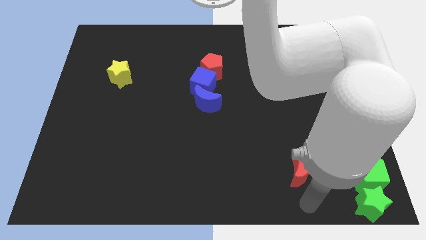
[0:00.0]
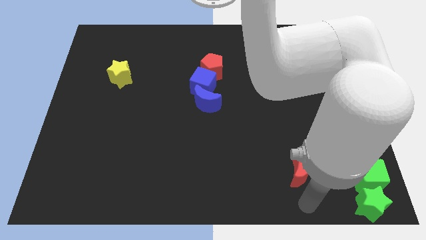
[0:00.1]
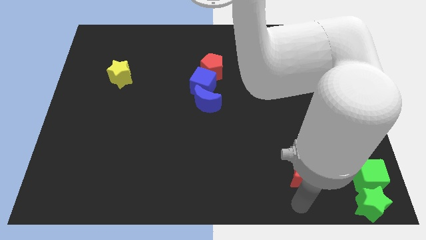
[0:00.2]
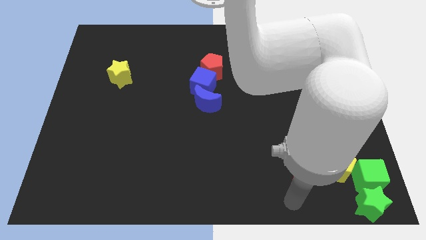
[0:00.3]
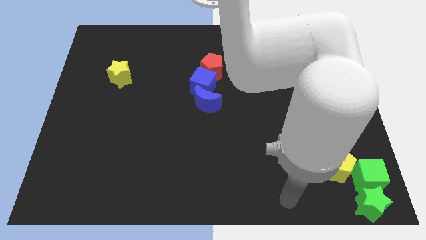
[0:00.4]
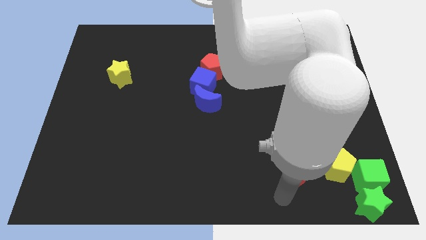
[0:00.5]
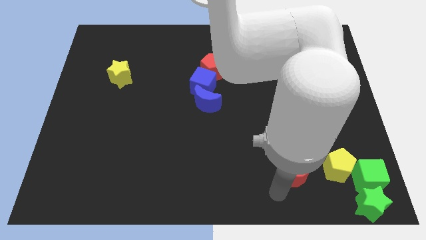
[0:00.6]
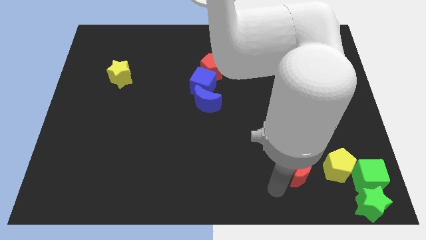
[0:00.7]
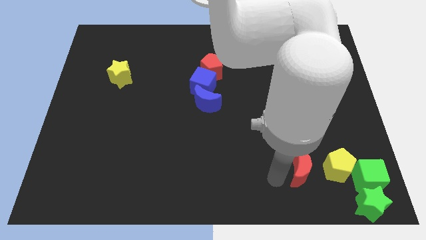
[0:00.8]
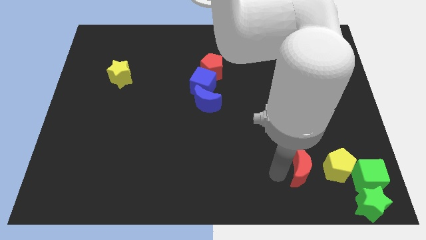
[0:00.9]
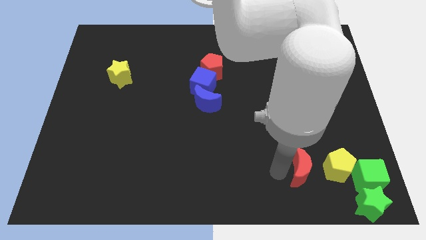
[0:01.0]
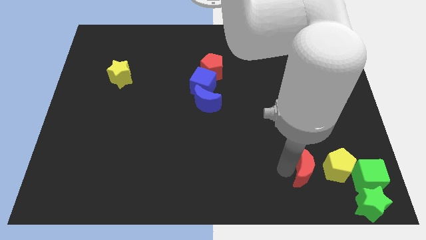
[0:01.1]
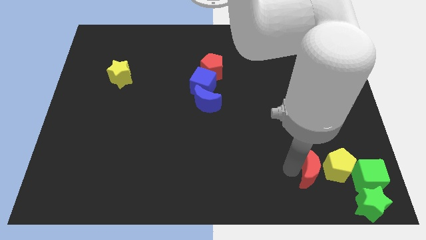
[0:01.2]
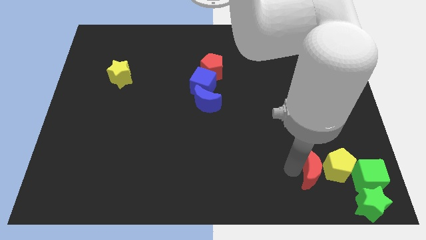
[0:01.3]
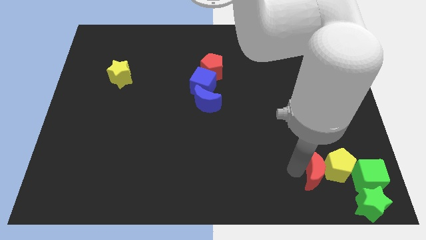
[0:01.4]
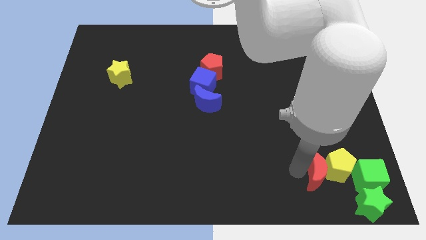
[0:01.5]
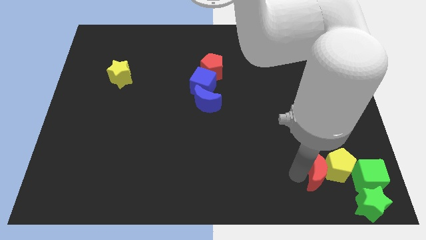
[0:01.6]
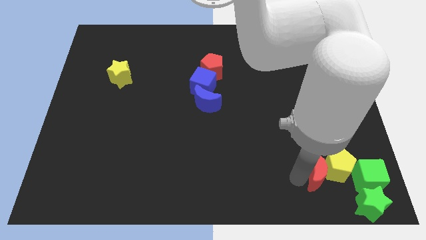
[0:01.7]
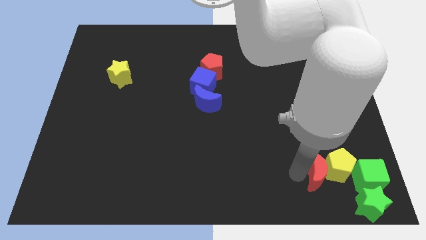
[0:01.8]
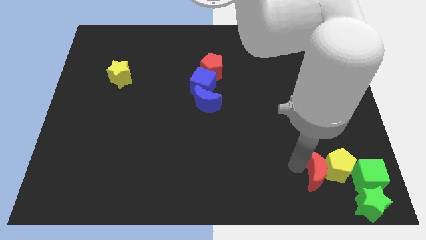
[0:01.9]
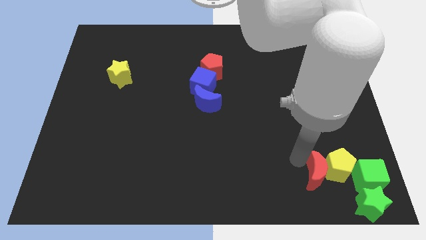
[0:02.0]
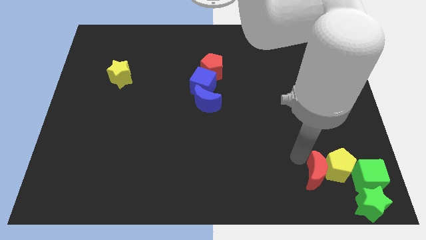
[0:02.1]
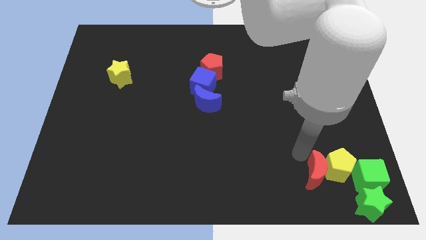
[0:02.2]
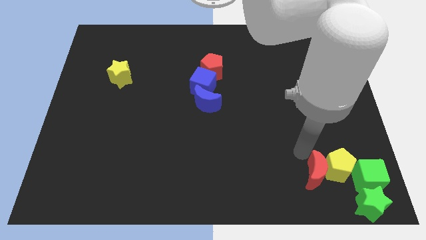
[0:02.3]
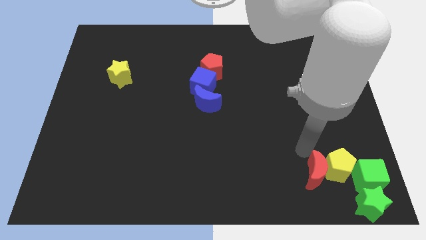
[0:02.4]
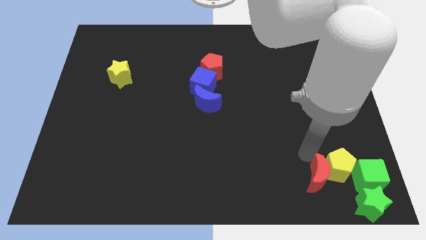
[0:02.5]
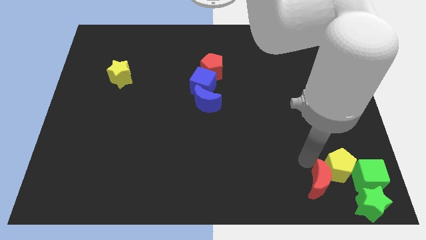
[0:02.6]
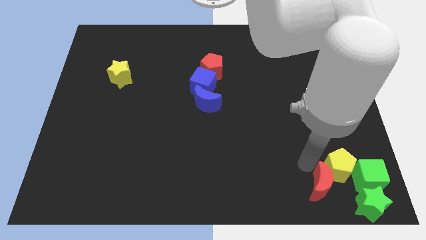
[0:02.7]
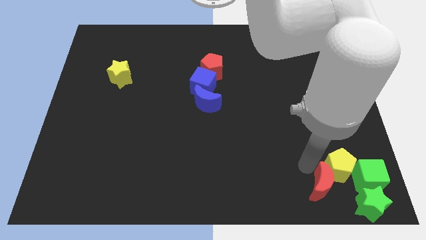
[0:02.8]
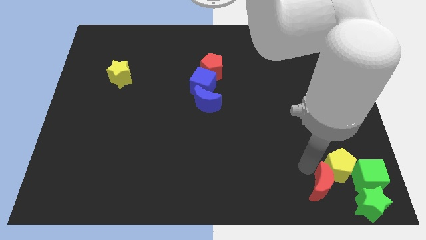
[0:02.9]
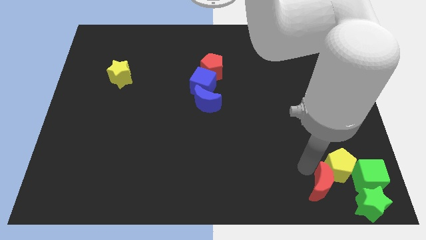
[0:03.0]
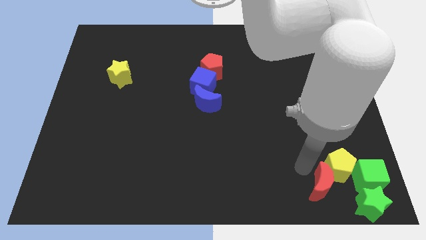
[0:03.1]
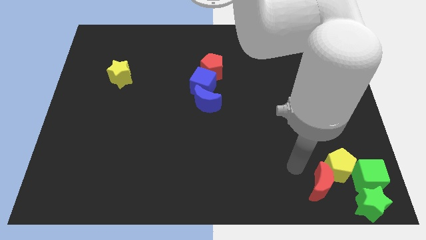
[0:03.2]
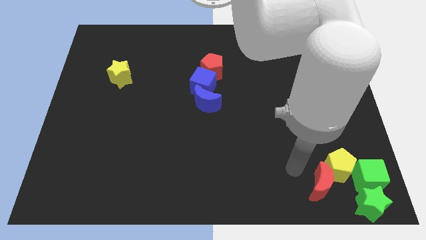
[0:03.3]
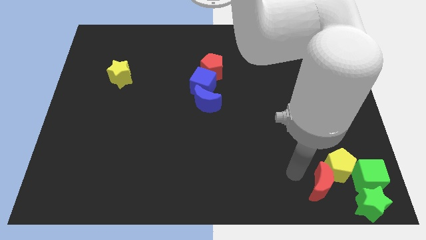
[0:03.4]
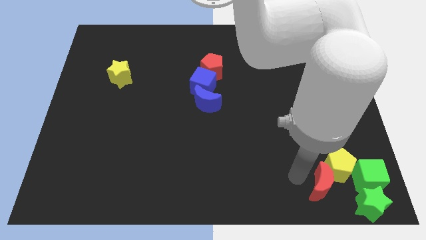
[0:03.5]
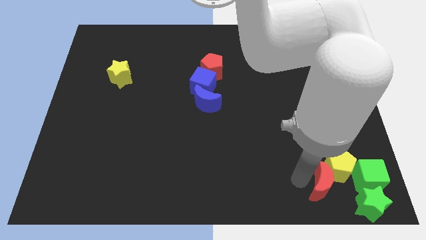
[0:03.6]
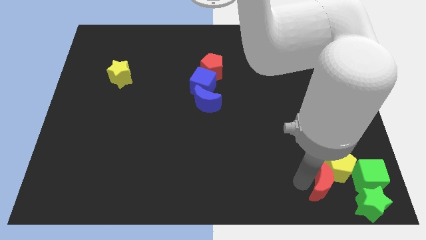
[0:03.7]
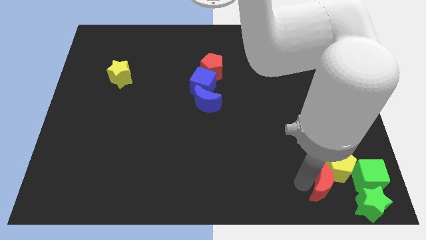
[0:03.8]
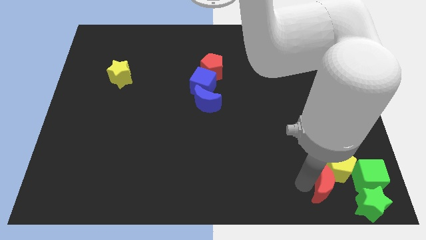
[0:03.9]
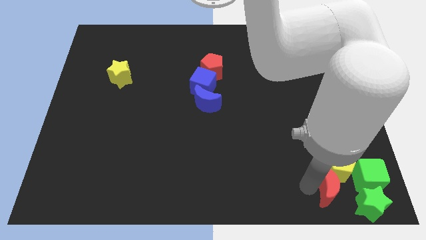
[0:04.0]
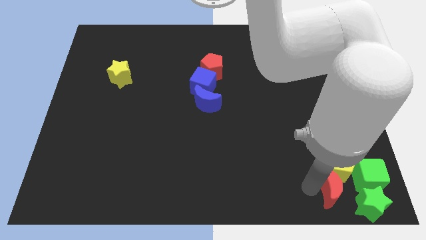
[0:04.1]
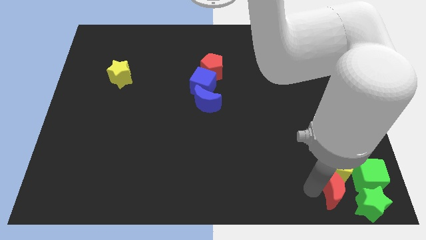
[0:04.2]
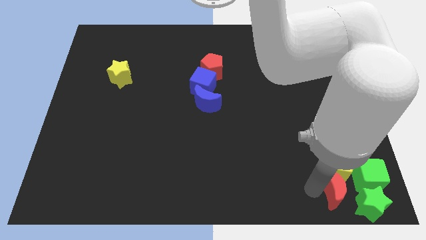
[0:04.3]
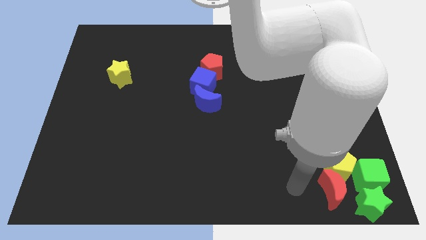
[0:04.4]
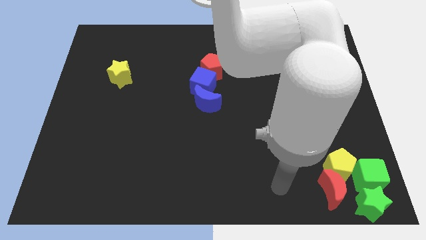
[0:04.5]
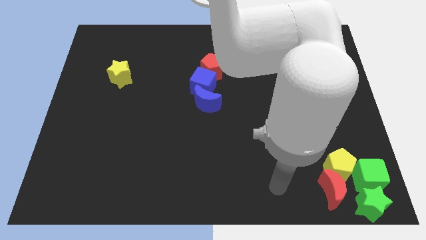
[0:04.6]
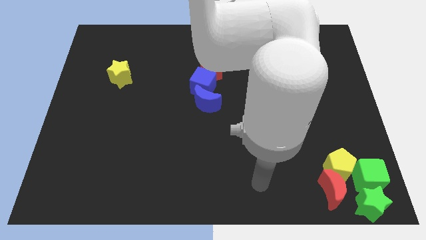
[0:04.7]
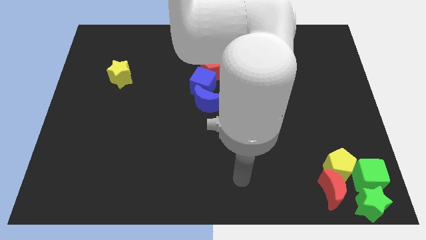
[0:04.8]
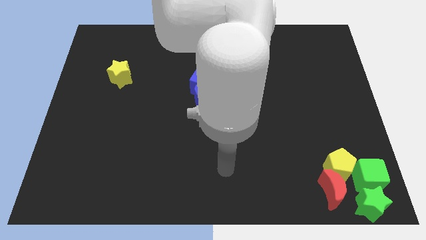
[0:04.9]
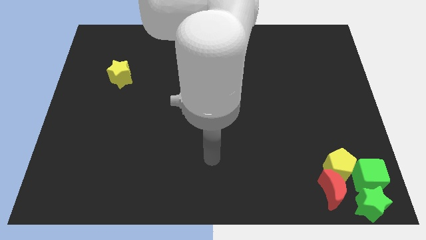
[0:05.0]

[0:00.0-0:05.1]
push red moon into group of blocks

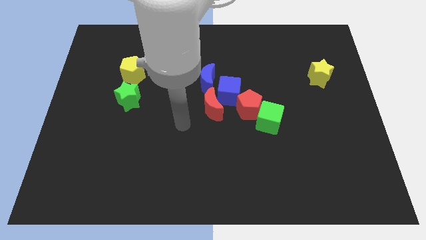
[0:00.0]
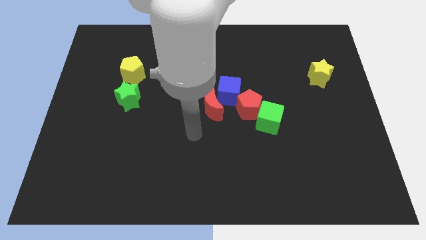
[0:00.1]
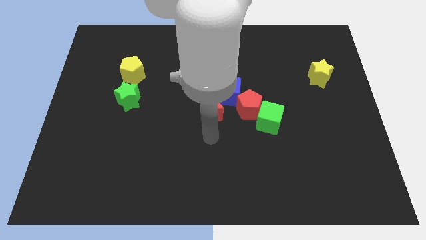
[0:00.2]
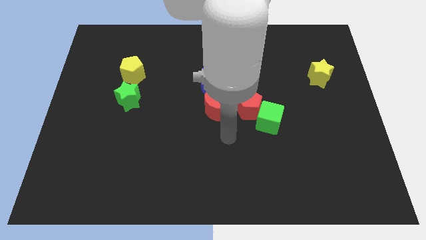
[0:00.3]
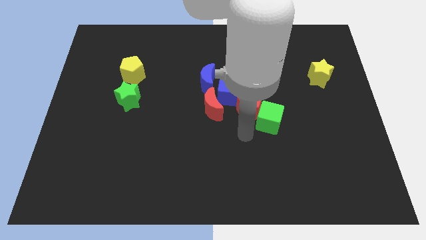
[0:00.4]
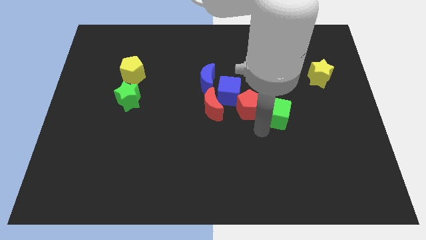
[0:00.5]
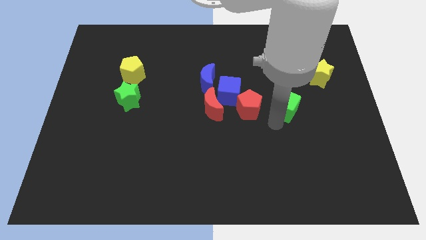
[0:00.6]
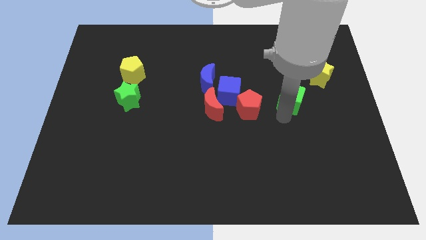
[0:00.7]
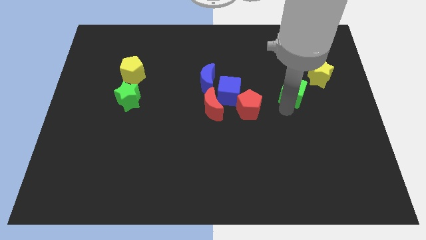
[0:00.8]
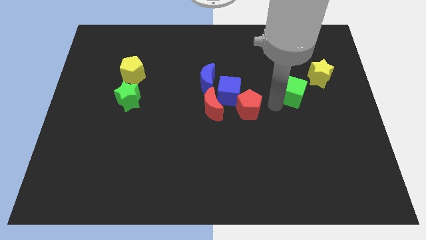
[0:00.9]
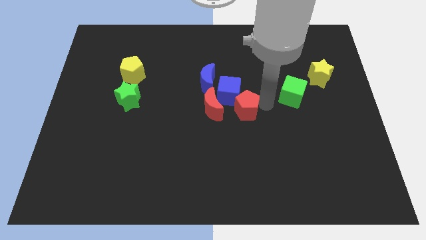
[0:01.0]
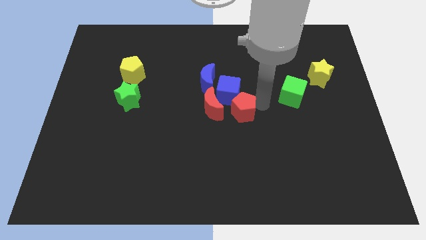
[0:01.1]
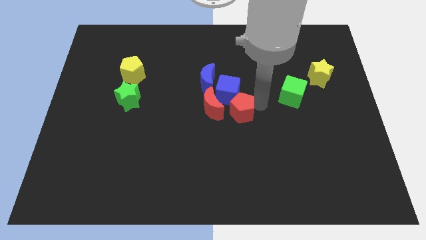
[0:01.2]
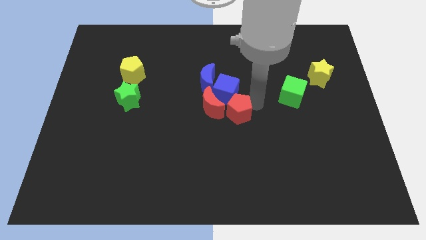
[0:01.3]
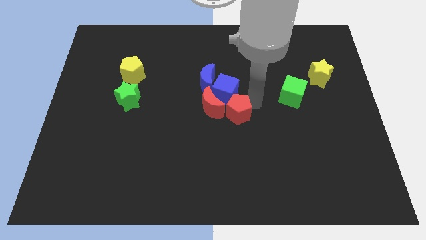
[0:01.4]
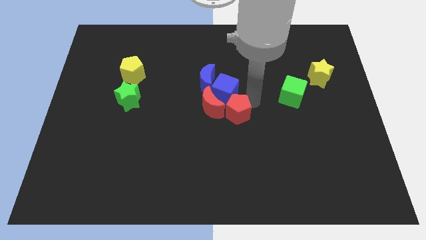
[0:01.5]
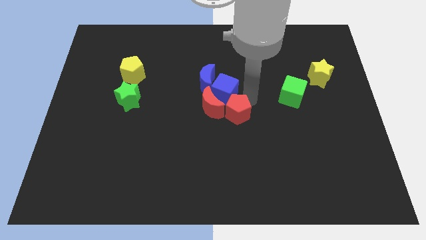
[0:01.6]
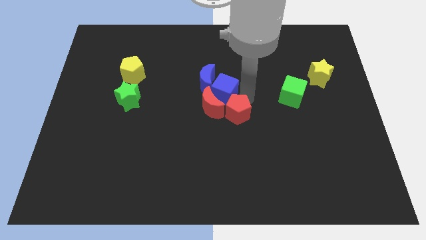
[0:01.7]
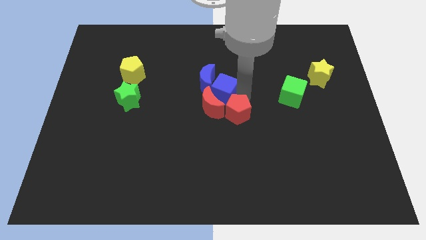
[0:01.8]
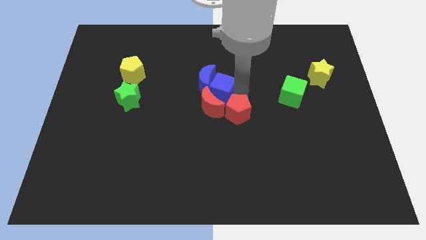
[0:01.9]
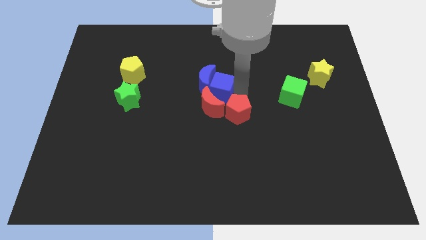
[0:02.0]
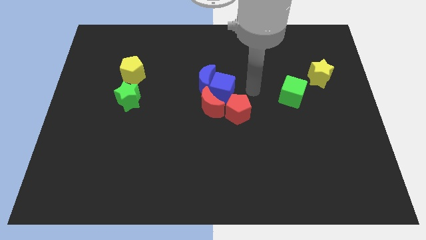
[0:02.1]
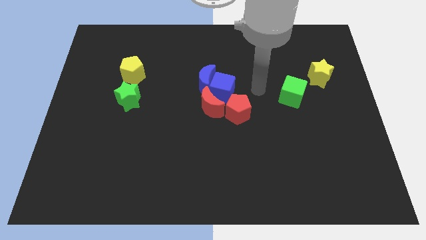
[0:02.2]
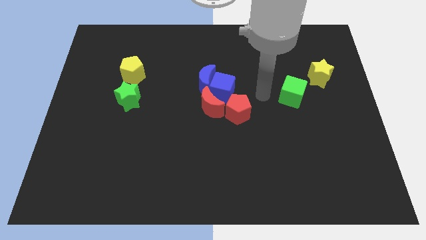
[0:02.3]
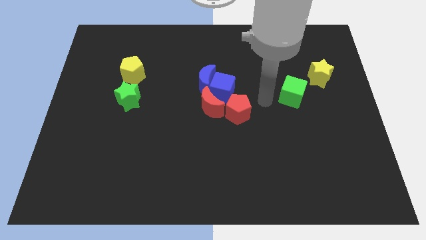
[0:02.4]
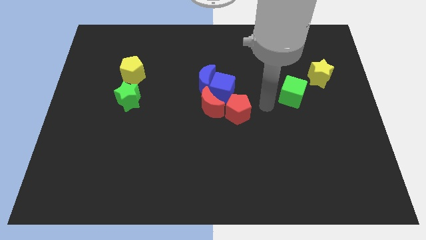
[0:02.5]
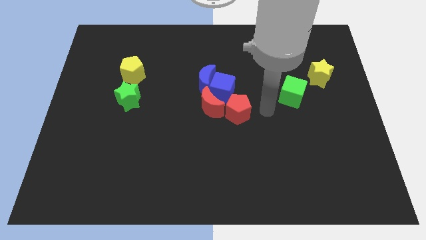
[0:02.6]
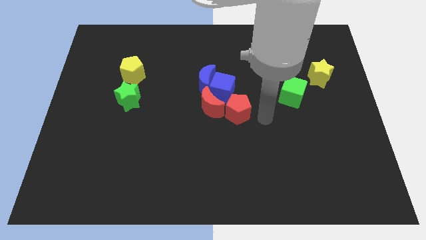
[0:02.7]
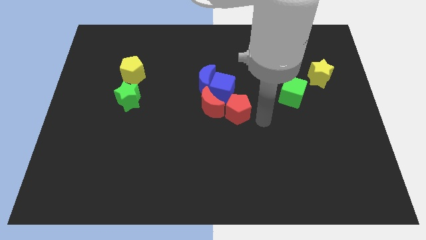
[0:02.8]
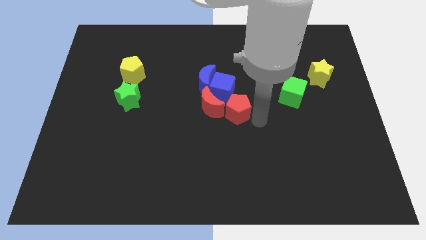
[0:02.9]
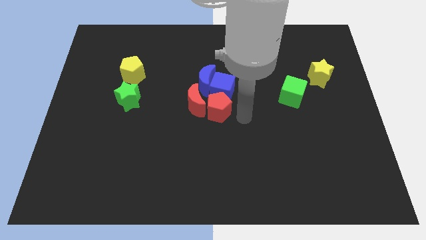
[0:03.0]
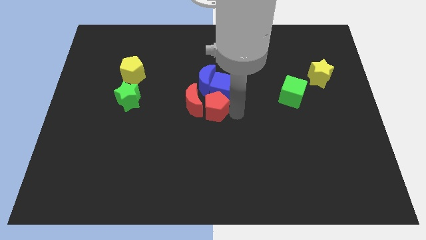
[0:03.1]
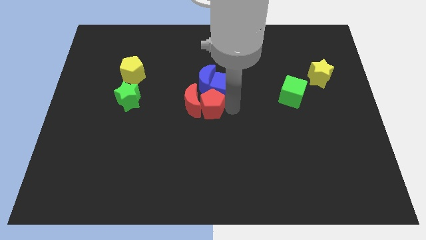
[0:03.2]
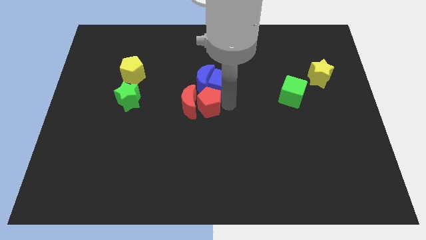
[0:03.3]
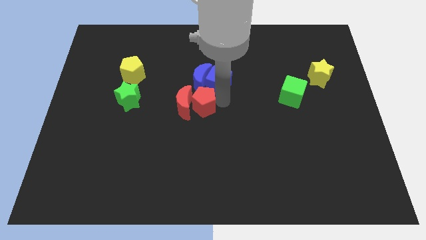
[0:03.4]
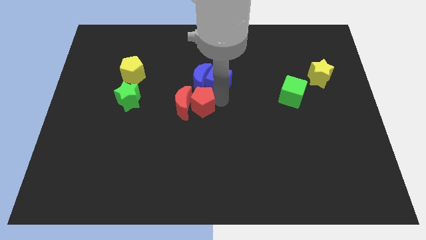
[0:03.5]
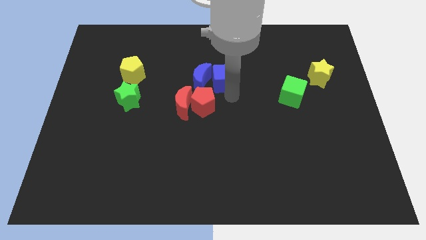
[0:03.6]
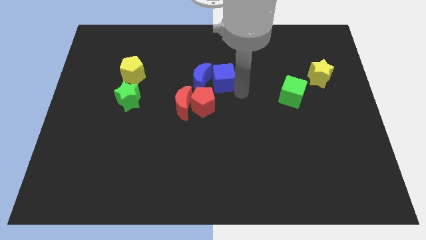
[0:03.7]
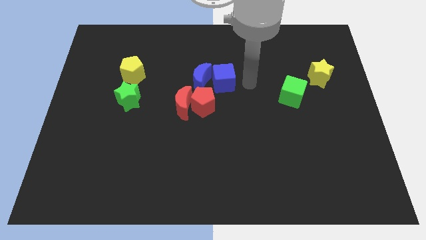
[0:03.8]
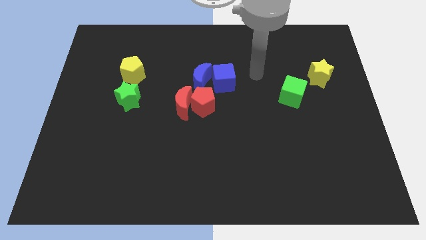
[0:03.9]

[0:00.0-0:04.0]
separate the green cube from red and blue block
